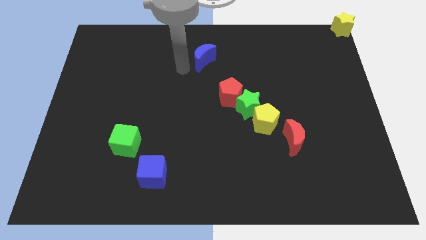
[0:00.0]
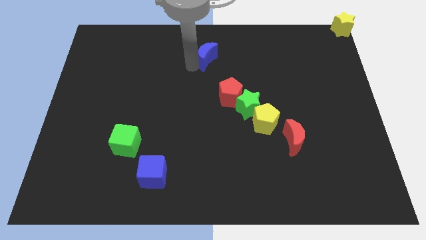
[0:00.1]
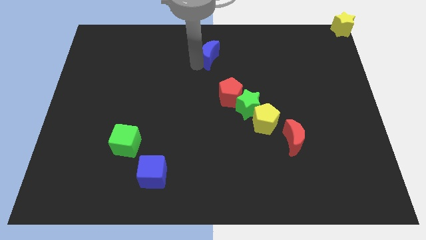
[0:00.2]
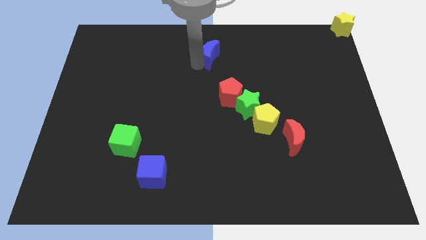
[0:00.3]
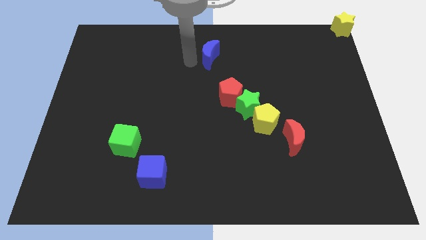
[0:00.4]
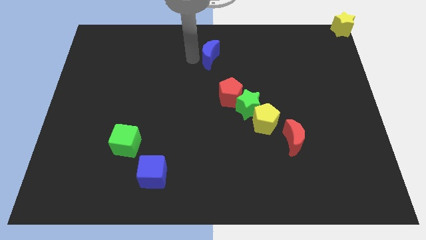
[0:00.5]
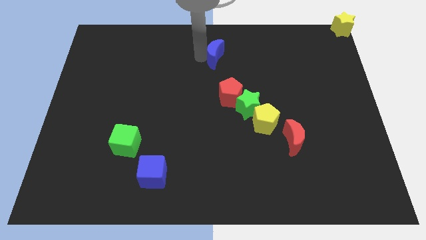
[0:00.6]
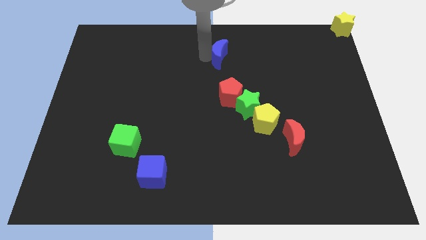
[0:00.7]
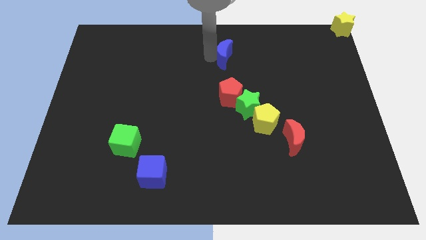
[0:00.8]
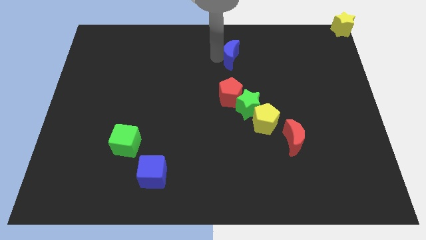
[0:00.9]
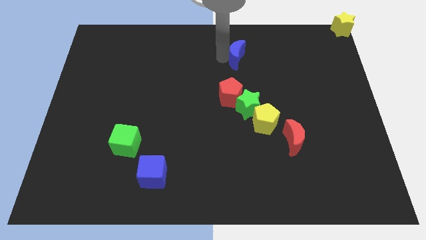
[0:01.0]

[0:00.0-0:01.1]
move the blue crescent parallel to the top of the red pentagon

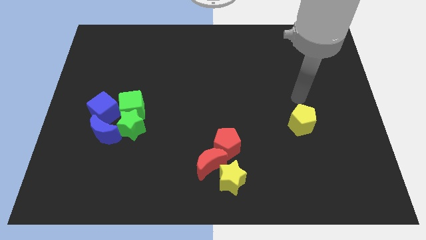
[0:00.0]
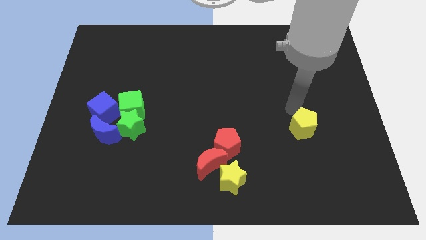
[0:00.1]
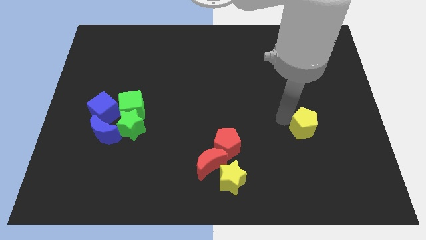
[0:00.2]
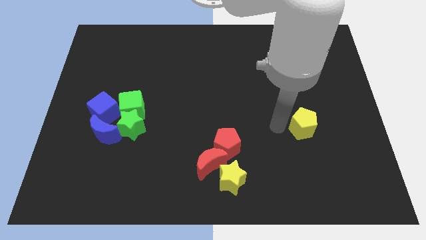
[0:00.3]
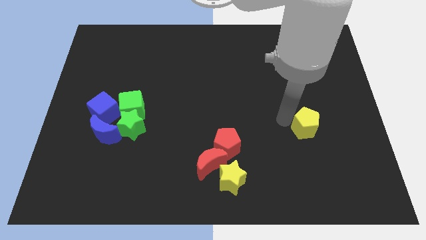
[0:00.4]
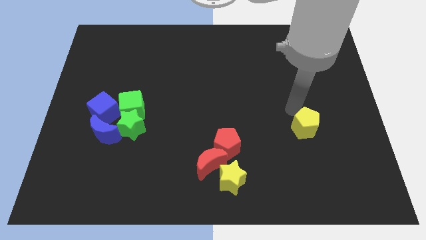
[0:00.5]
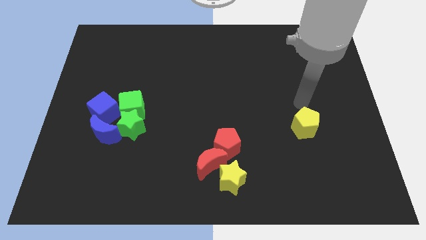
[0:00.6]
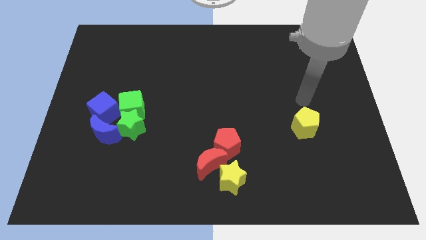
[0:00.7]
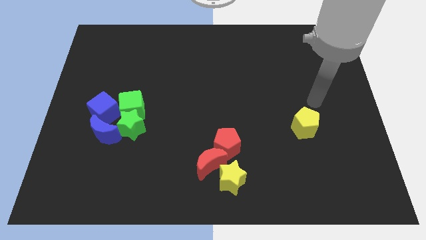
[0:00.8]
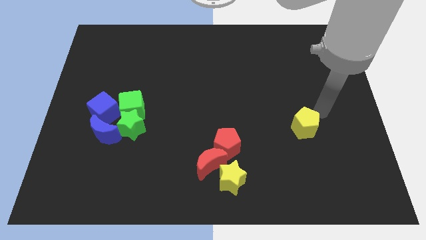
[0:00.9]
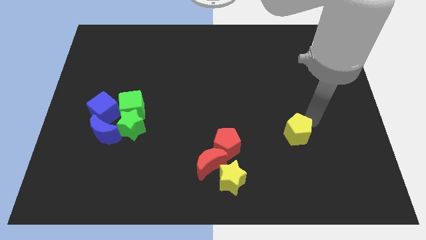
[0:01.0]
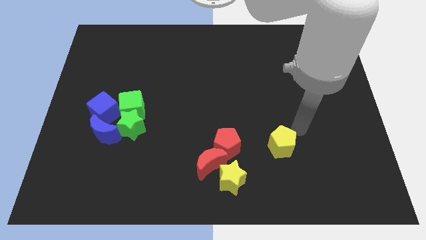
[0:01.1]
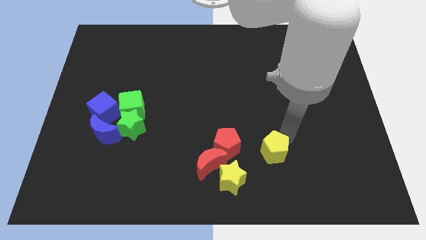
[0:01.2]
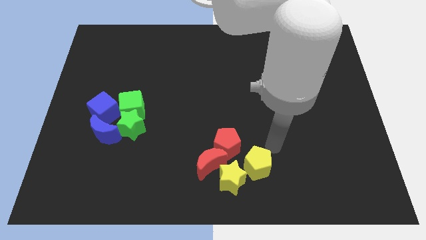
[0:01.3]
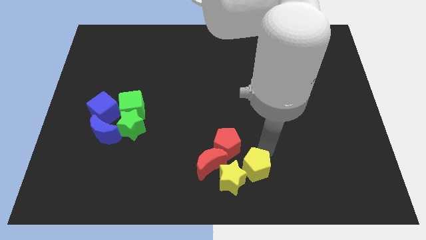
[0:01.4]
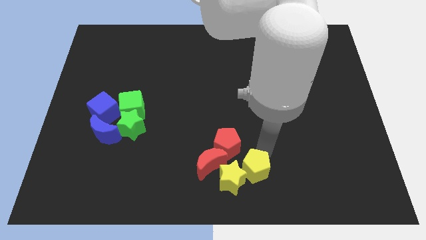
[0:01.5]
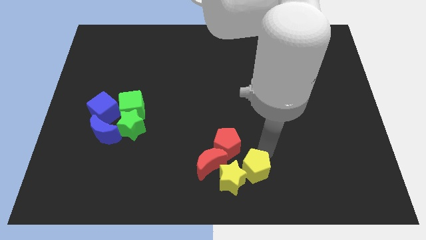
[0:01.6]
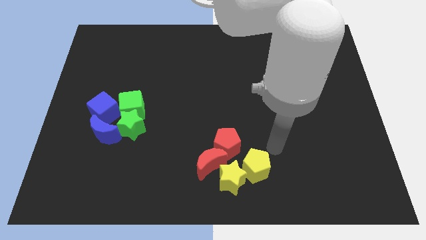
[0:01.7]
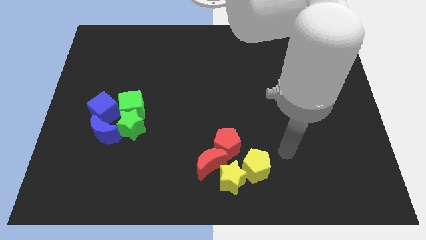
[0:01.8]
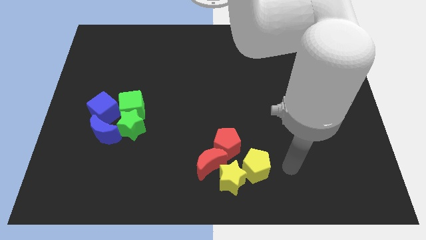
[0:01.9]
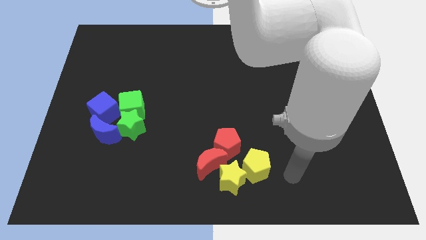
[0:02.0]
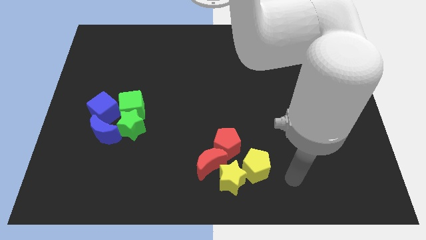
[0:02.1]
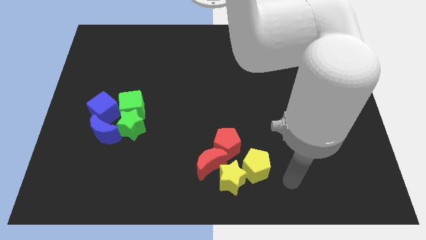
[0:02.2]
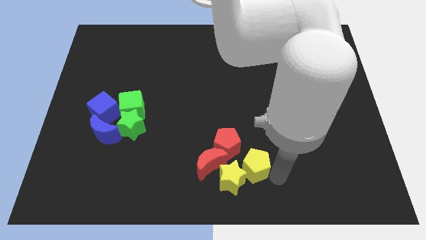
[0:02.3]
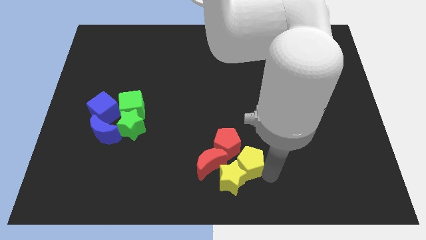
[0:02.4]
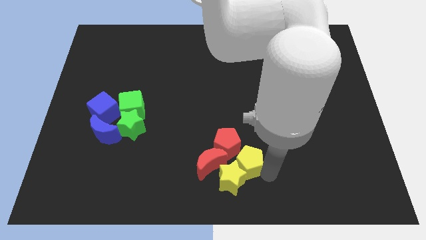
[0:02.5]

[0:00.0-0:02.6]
move the yellow pentagon towards the yellow star

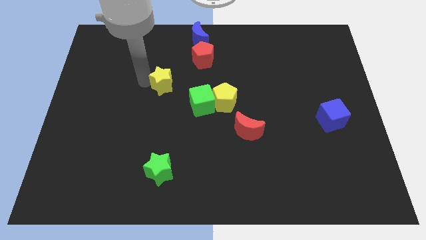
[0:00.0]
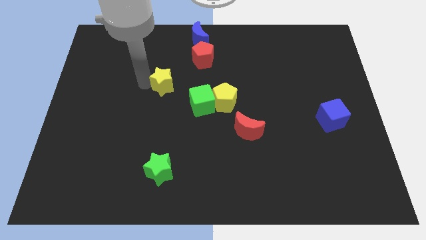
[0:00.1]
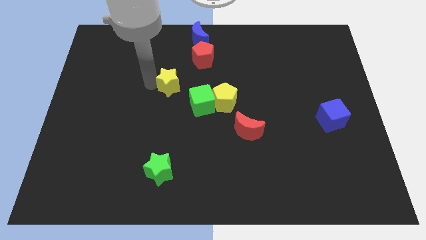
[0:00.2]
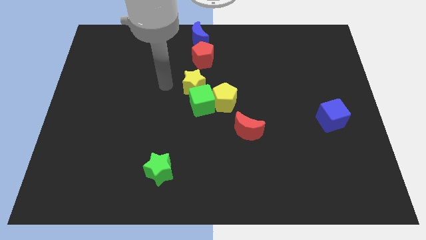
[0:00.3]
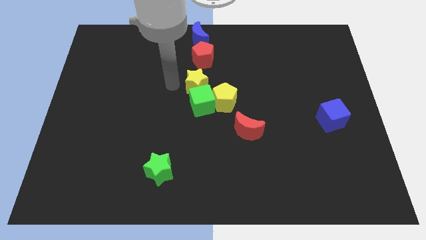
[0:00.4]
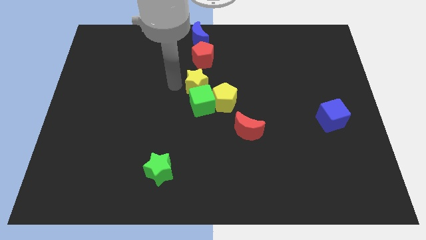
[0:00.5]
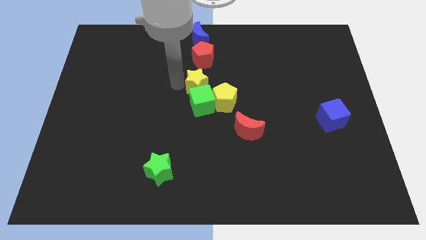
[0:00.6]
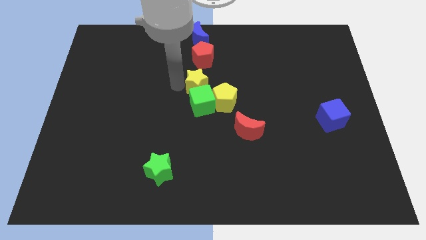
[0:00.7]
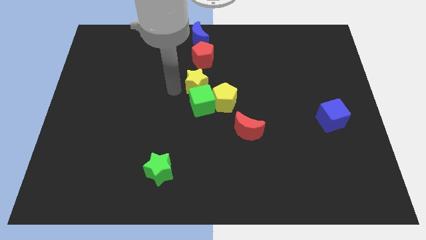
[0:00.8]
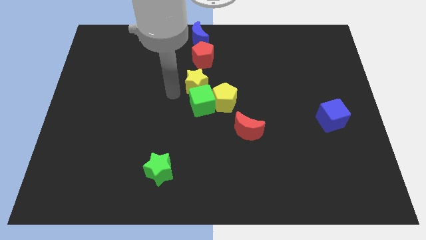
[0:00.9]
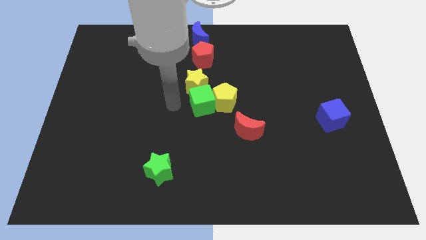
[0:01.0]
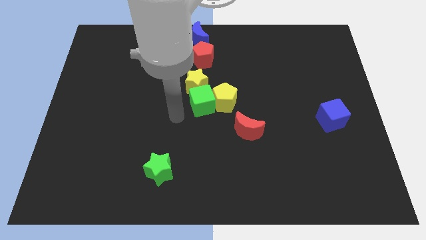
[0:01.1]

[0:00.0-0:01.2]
place the yellow star in between the red pentagon and green cube

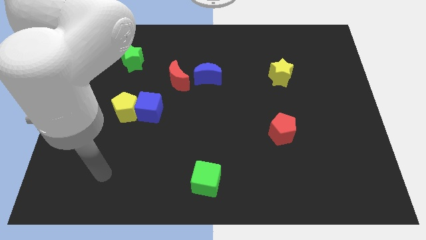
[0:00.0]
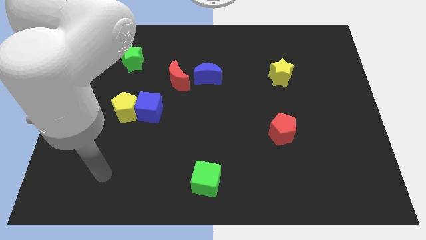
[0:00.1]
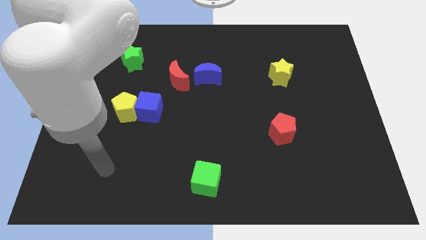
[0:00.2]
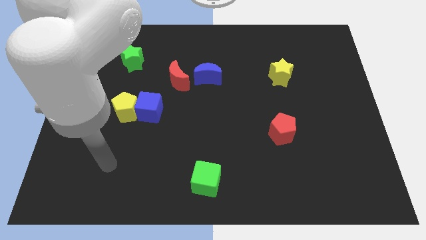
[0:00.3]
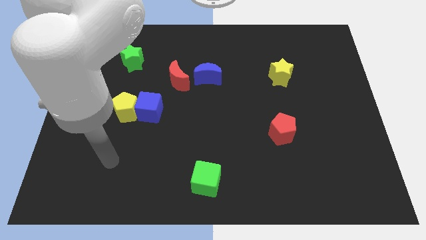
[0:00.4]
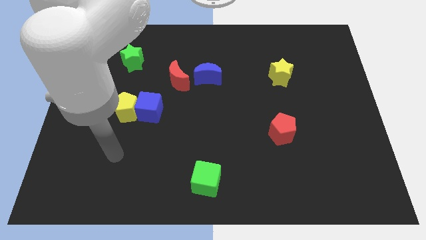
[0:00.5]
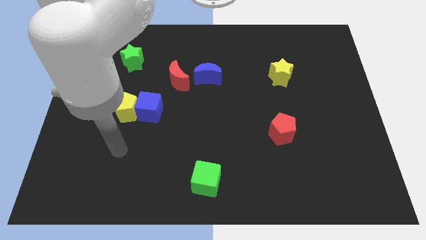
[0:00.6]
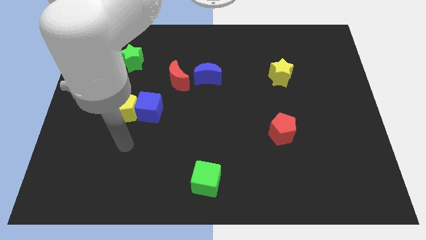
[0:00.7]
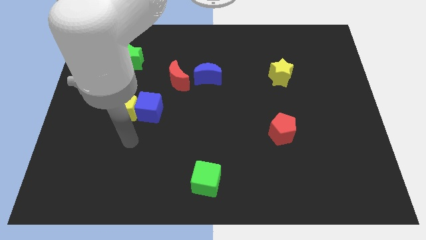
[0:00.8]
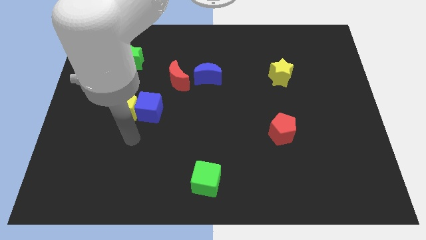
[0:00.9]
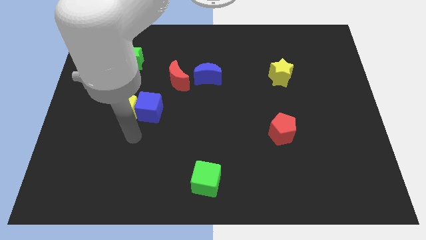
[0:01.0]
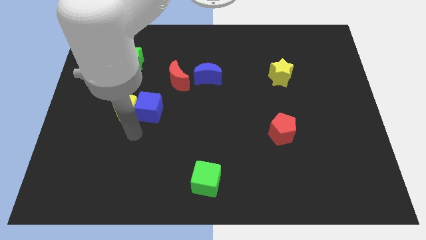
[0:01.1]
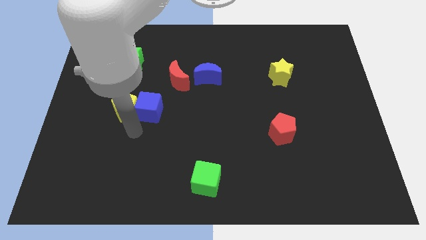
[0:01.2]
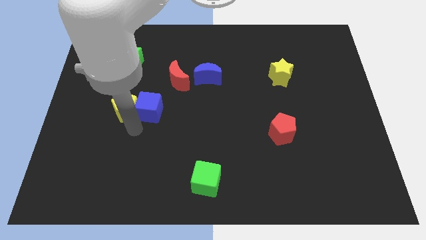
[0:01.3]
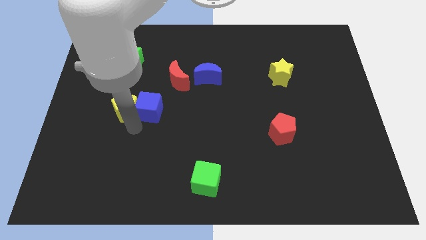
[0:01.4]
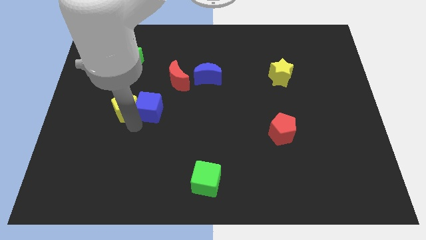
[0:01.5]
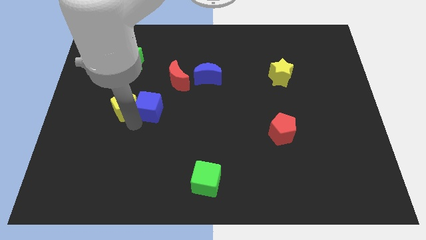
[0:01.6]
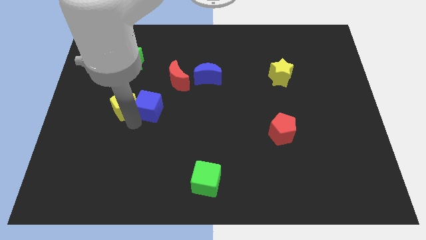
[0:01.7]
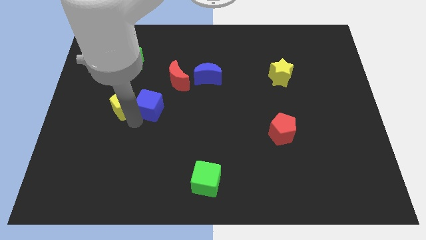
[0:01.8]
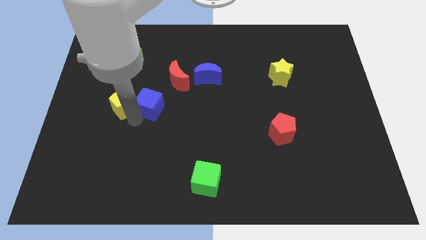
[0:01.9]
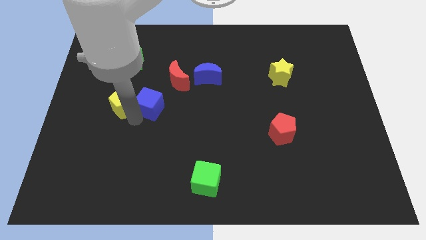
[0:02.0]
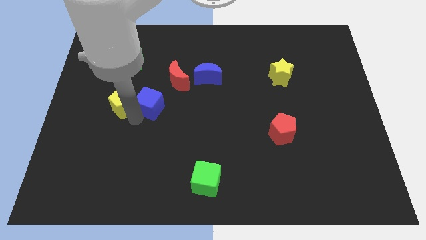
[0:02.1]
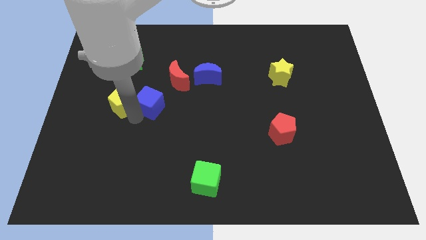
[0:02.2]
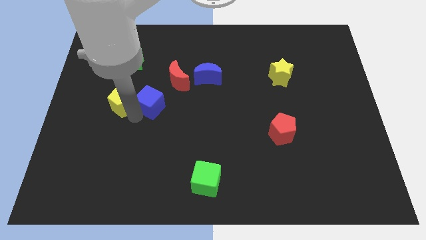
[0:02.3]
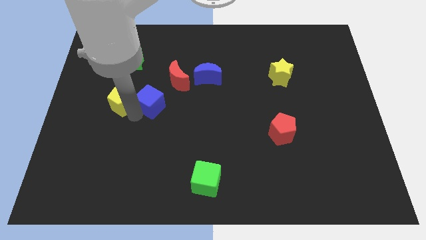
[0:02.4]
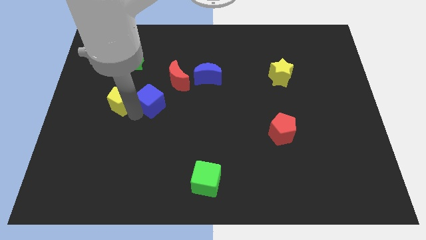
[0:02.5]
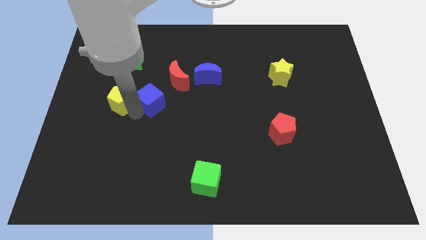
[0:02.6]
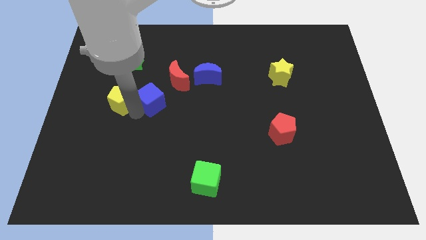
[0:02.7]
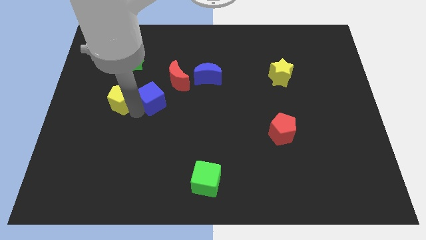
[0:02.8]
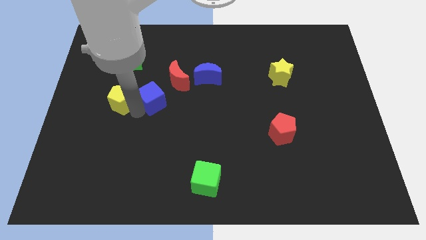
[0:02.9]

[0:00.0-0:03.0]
separate the yellow pentagon from the blue cube

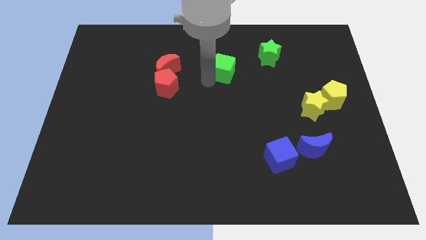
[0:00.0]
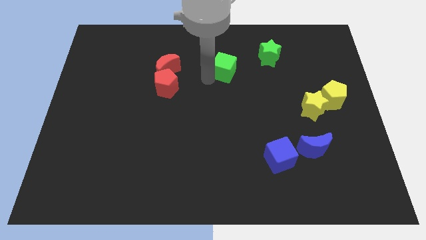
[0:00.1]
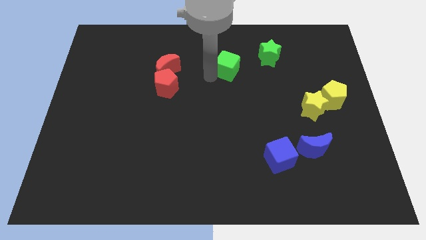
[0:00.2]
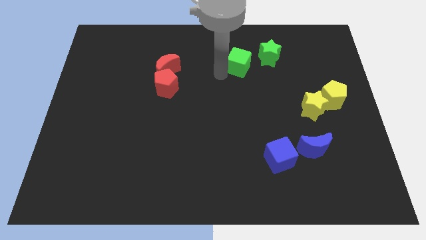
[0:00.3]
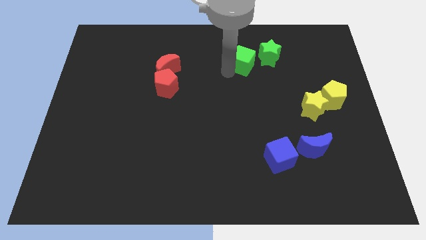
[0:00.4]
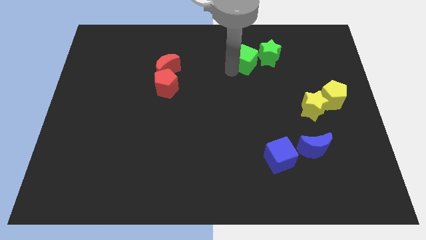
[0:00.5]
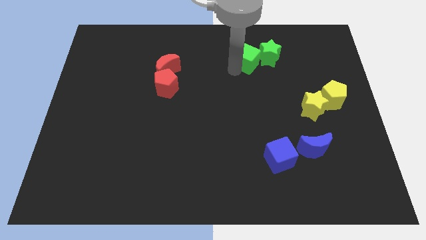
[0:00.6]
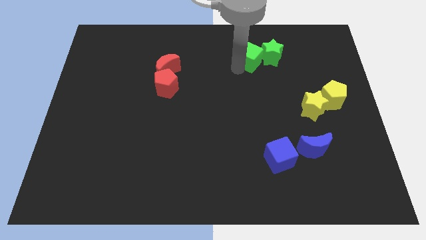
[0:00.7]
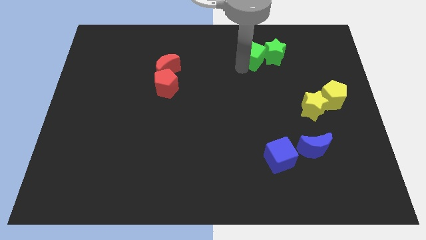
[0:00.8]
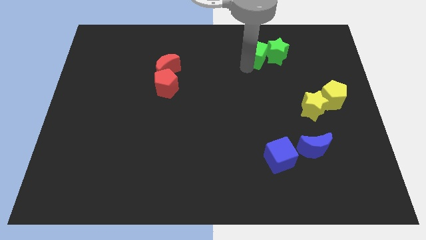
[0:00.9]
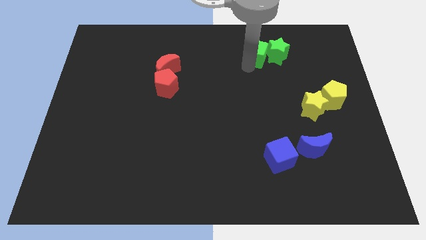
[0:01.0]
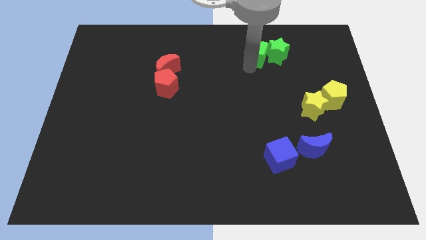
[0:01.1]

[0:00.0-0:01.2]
move the green cube towards the green star
